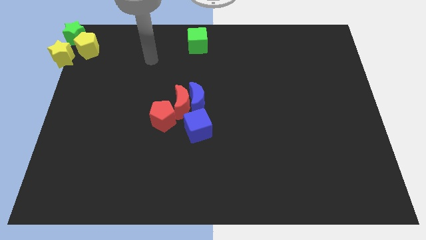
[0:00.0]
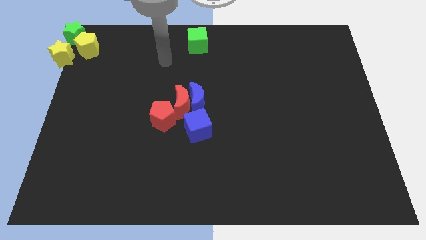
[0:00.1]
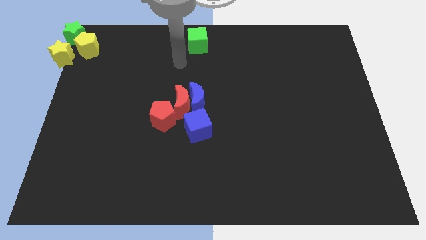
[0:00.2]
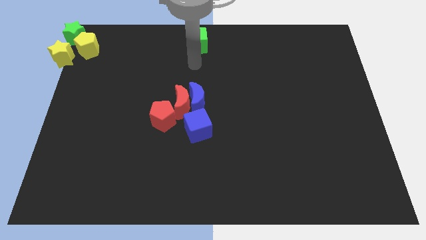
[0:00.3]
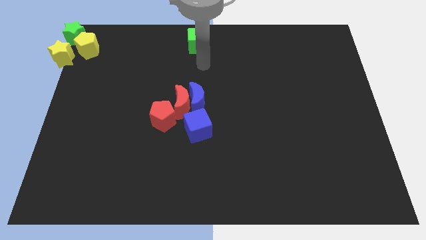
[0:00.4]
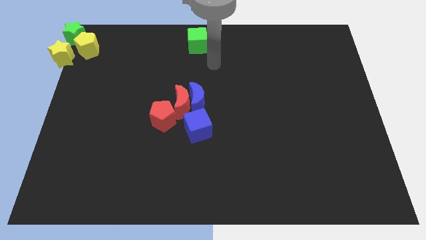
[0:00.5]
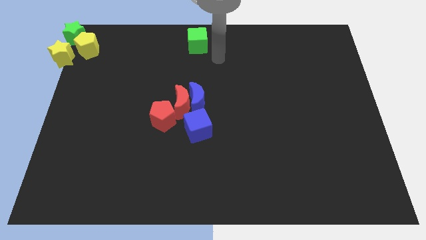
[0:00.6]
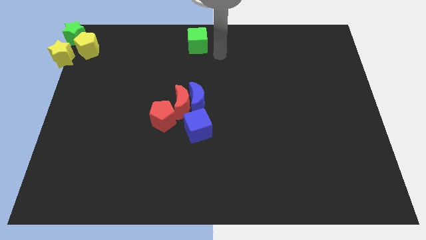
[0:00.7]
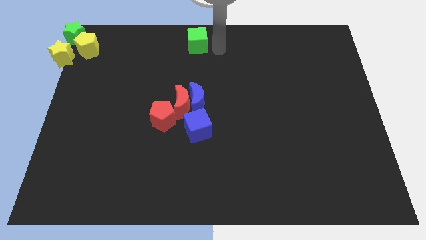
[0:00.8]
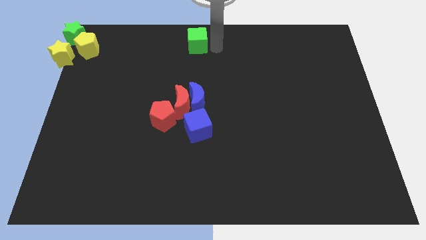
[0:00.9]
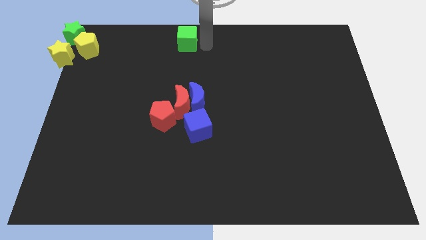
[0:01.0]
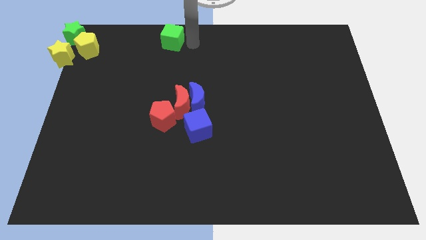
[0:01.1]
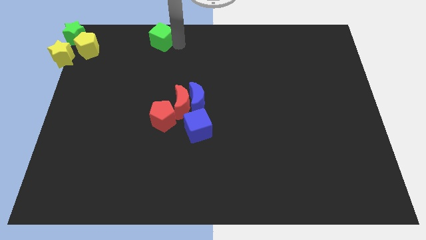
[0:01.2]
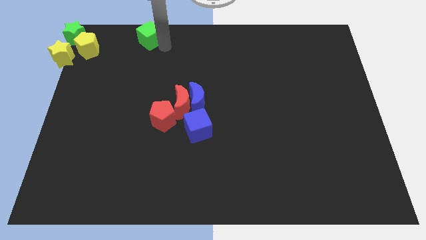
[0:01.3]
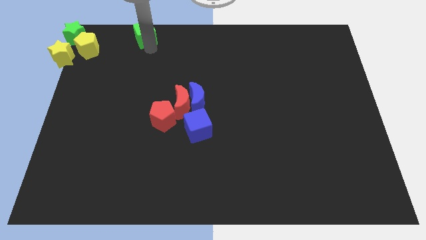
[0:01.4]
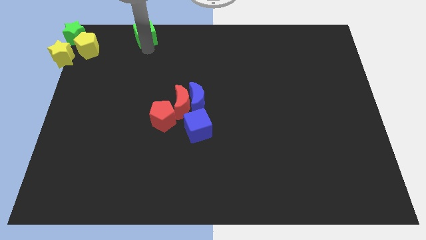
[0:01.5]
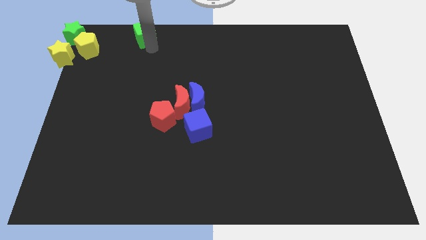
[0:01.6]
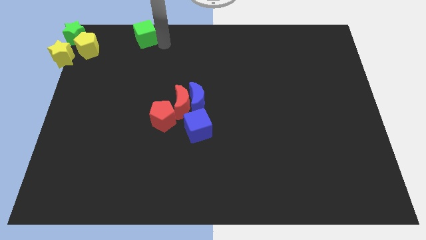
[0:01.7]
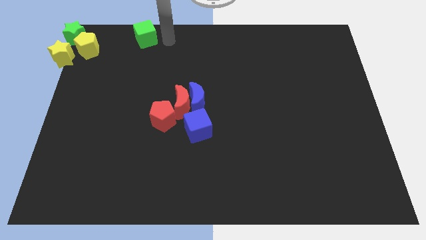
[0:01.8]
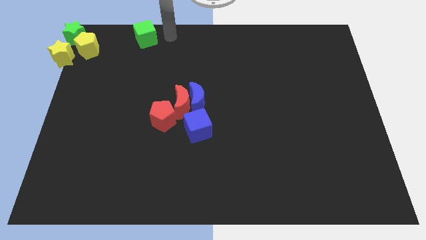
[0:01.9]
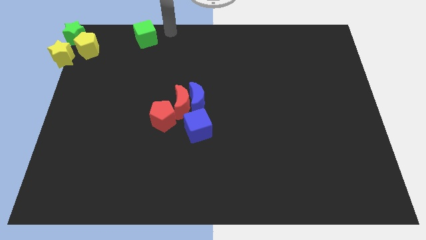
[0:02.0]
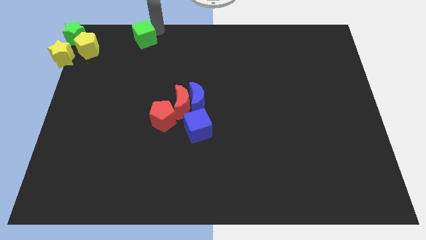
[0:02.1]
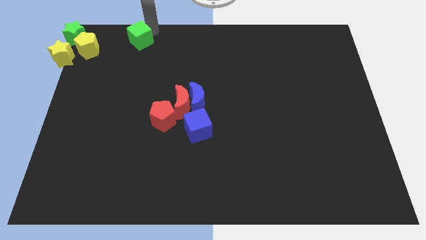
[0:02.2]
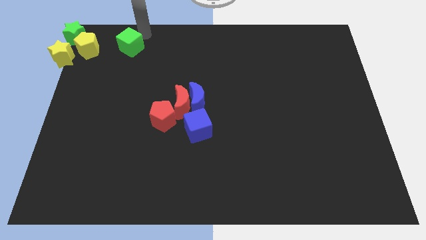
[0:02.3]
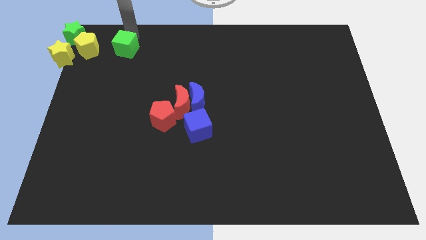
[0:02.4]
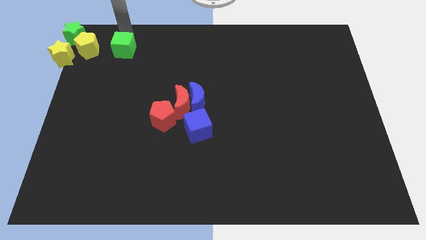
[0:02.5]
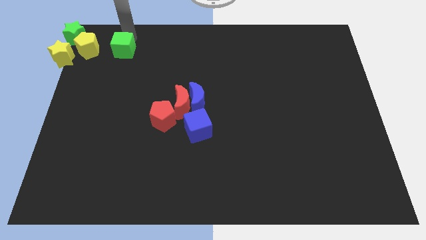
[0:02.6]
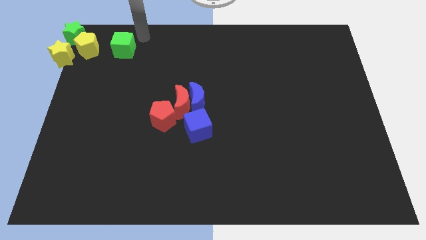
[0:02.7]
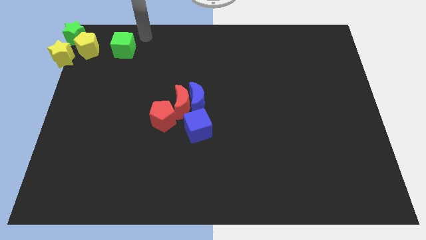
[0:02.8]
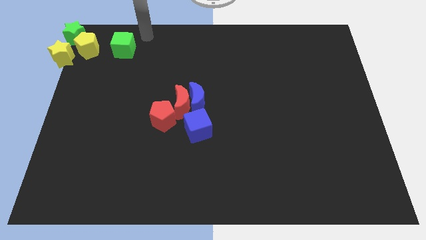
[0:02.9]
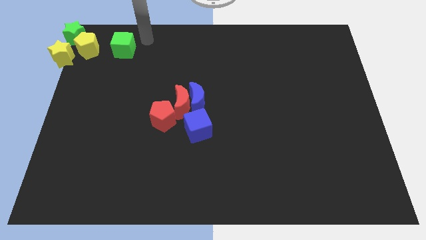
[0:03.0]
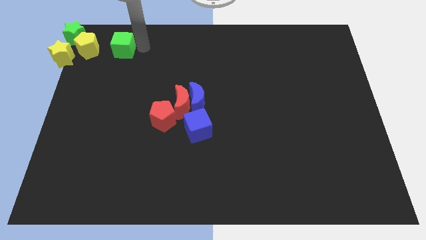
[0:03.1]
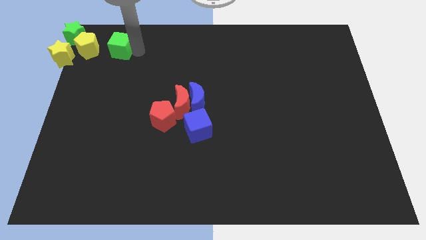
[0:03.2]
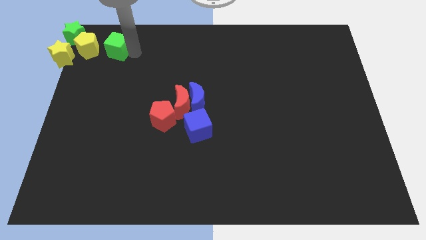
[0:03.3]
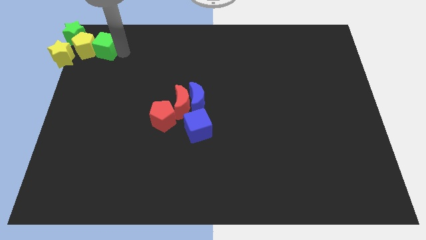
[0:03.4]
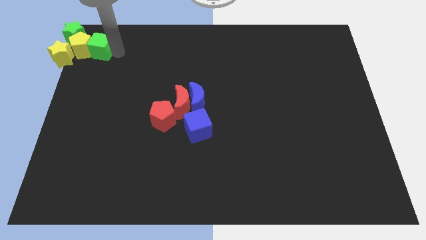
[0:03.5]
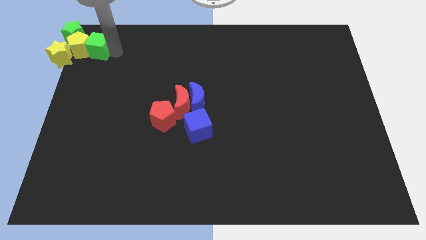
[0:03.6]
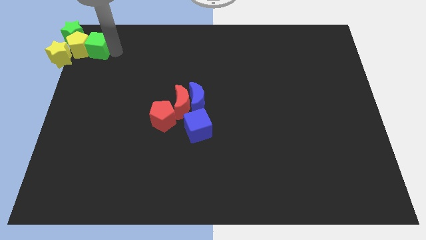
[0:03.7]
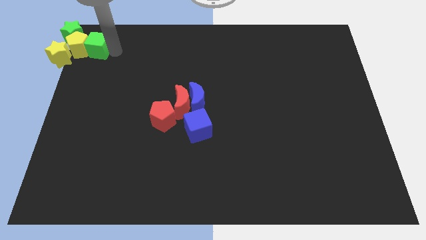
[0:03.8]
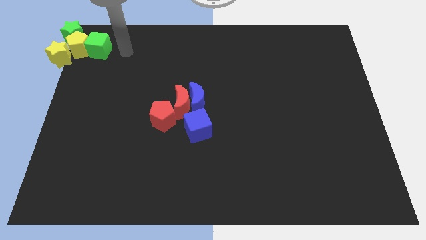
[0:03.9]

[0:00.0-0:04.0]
move the green cube to the right of the yellow pentagon

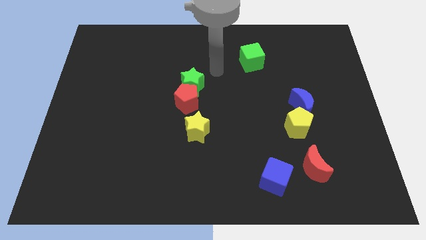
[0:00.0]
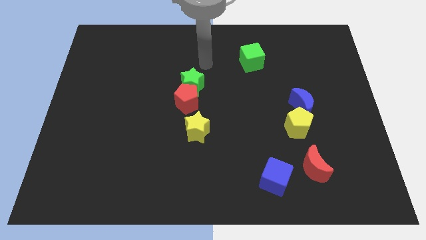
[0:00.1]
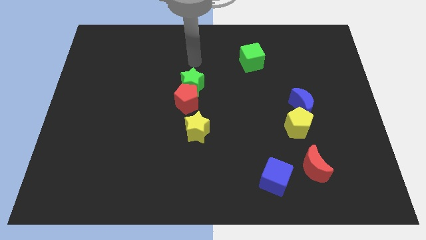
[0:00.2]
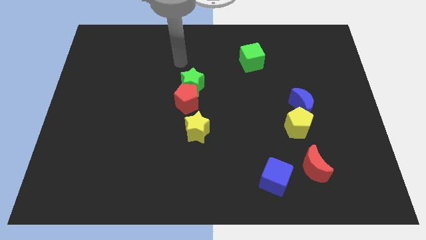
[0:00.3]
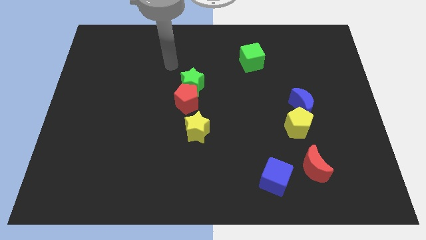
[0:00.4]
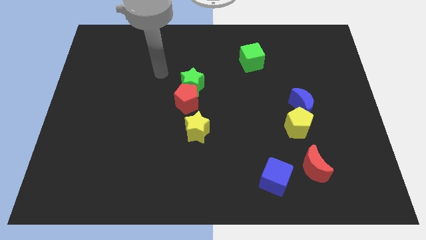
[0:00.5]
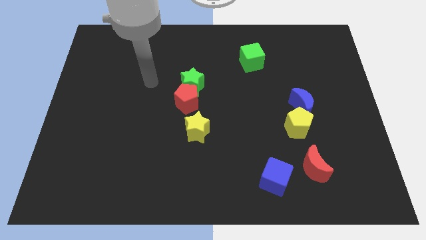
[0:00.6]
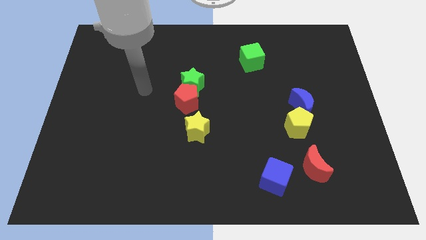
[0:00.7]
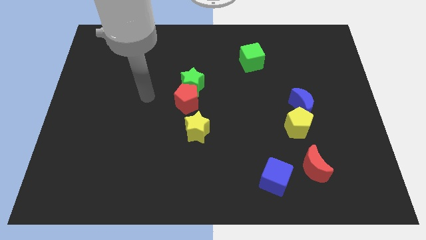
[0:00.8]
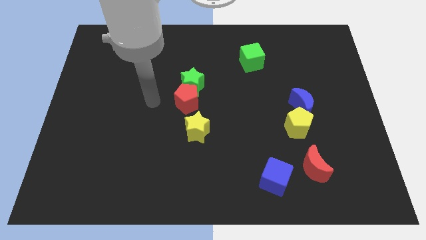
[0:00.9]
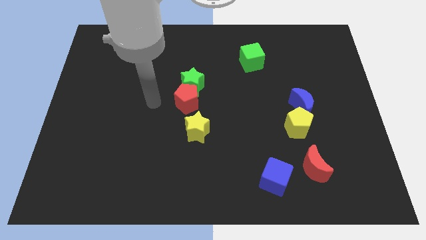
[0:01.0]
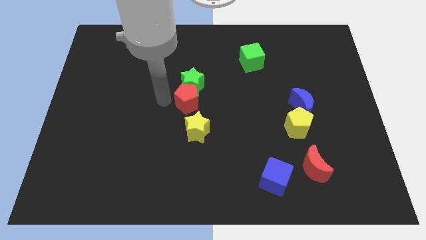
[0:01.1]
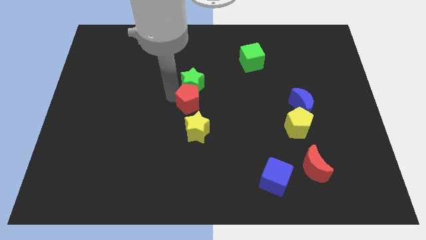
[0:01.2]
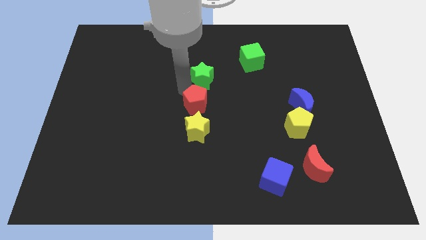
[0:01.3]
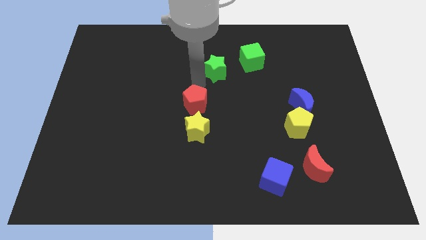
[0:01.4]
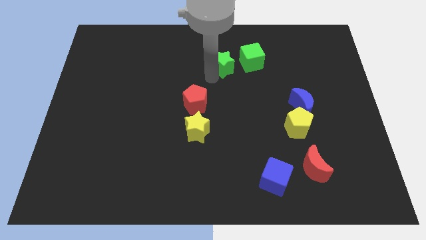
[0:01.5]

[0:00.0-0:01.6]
point your arm between red pentagon and green star

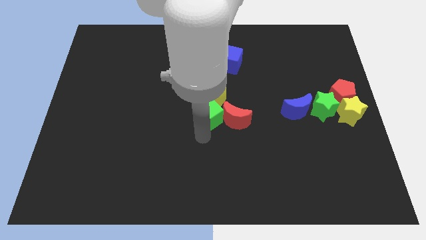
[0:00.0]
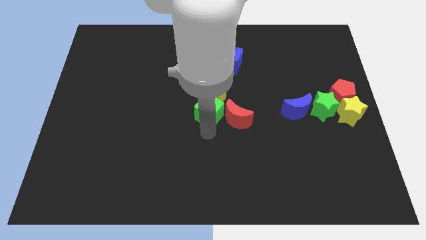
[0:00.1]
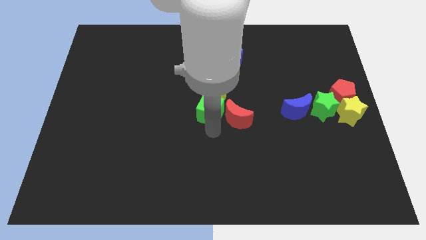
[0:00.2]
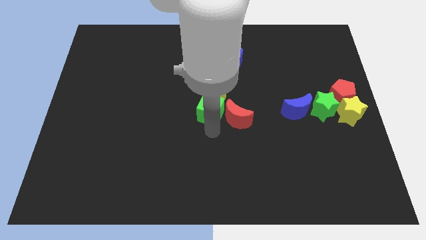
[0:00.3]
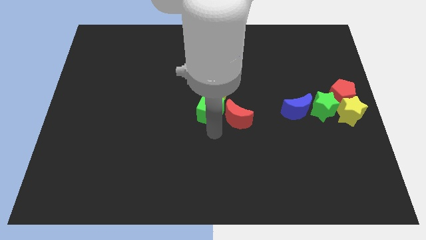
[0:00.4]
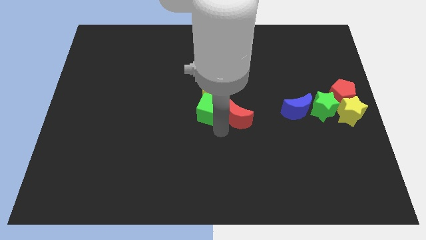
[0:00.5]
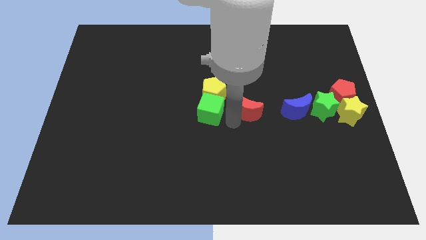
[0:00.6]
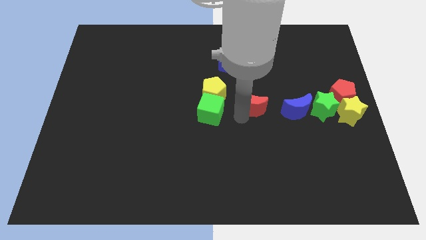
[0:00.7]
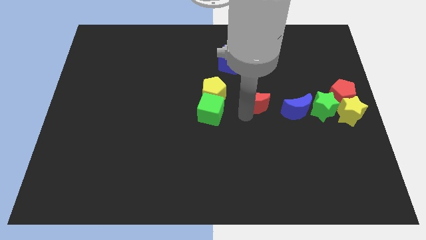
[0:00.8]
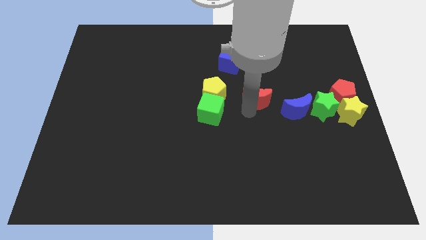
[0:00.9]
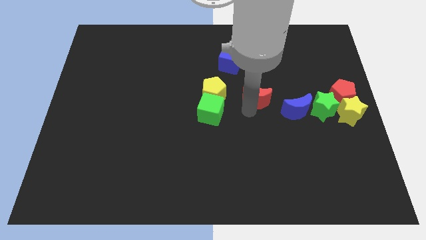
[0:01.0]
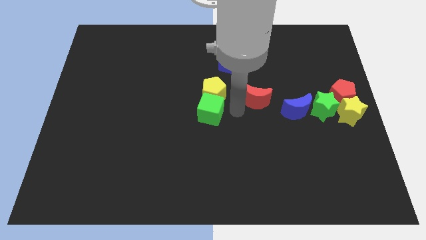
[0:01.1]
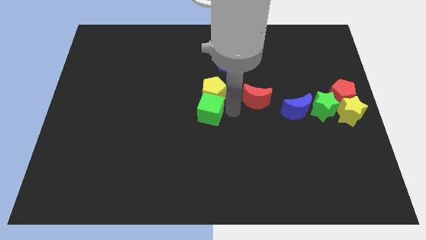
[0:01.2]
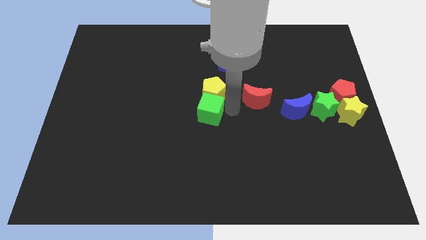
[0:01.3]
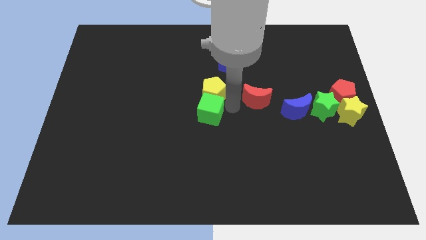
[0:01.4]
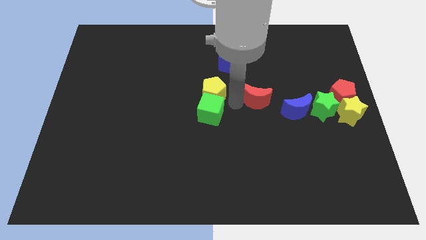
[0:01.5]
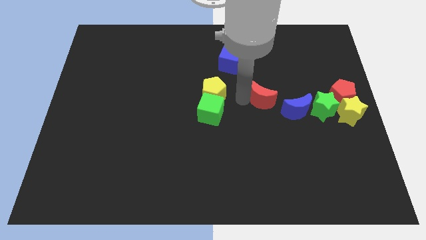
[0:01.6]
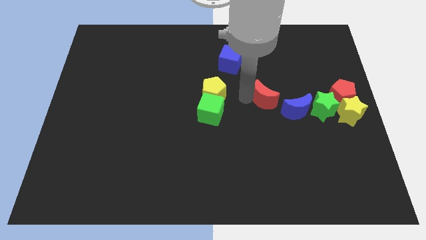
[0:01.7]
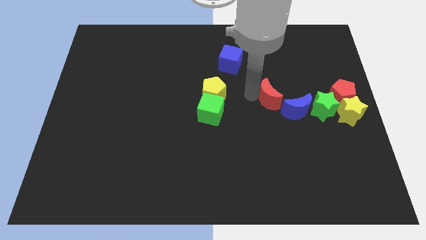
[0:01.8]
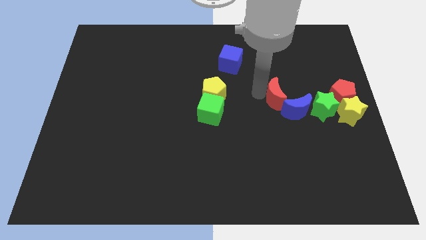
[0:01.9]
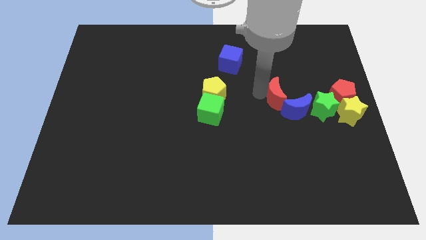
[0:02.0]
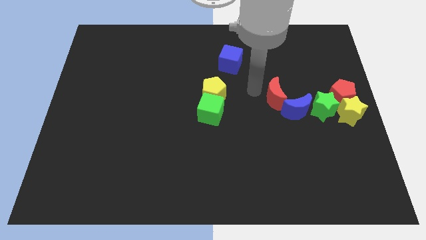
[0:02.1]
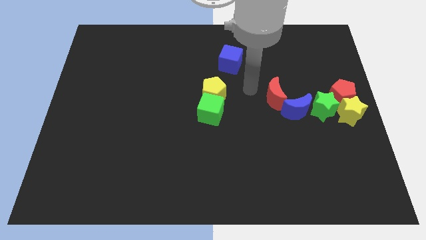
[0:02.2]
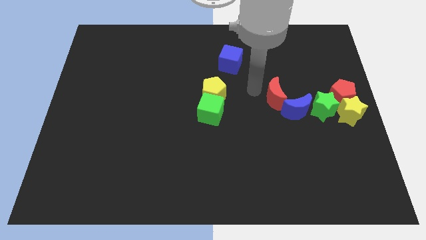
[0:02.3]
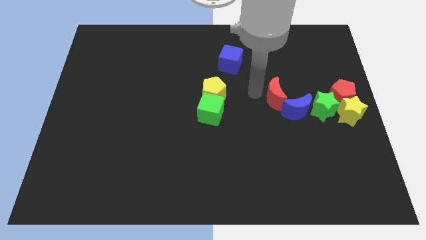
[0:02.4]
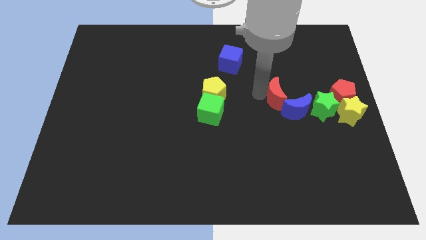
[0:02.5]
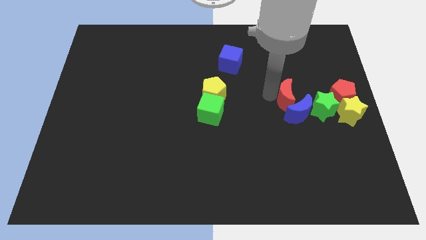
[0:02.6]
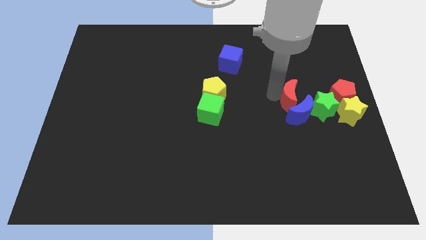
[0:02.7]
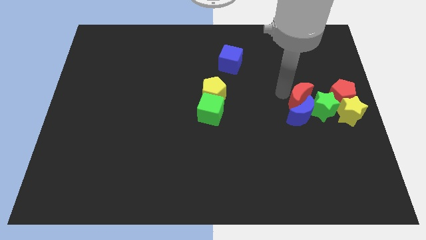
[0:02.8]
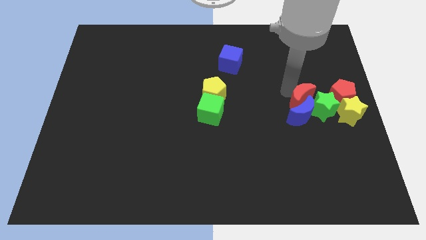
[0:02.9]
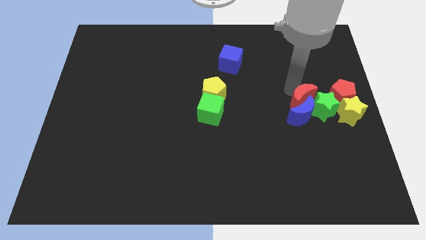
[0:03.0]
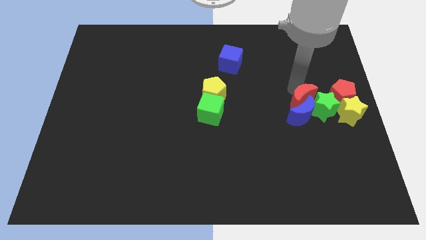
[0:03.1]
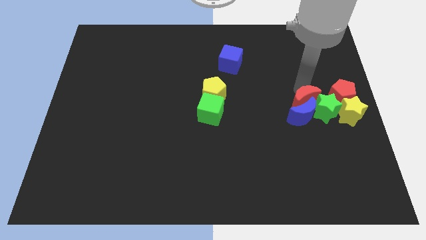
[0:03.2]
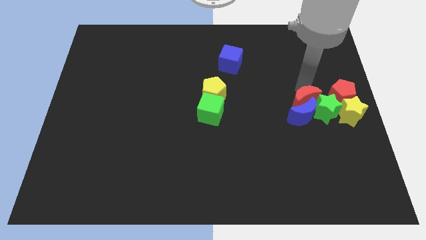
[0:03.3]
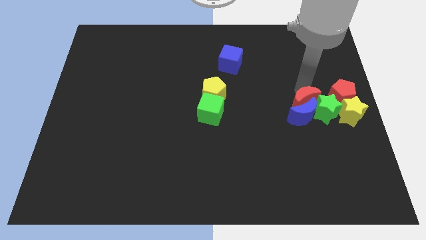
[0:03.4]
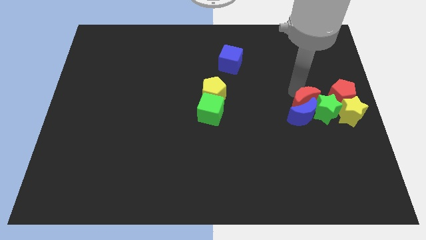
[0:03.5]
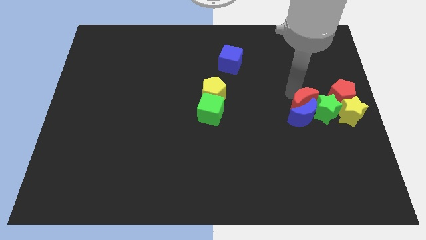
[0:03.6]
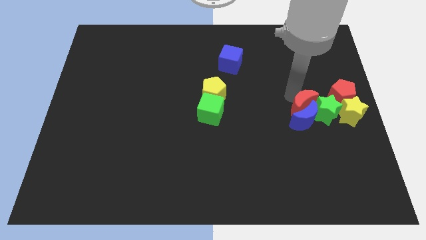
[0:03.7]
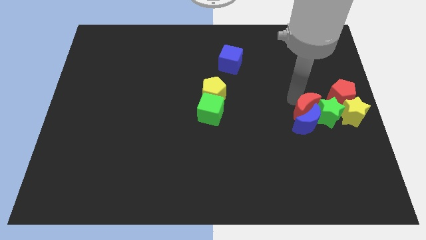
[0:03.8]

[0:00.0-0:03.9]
push red crescent into the blue crescent
